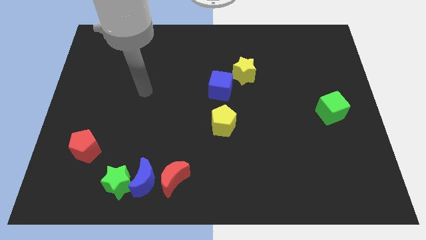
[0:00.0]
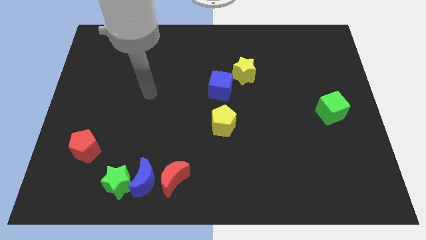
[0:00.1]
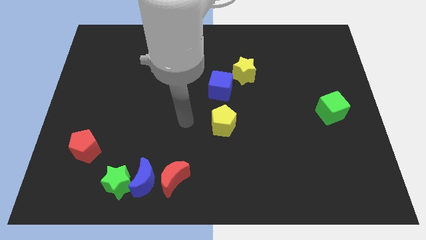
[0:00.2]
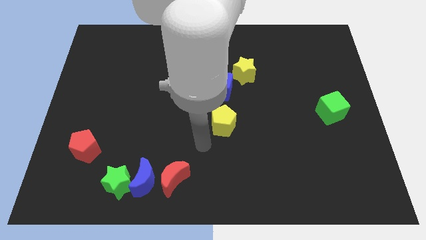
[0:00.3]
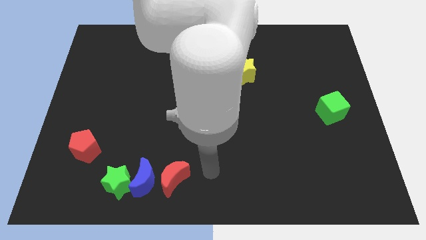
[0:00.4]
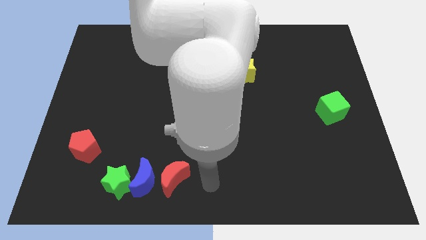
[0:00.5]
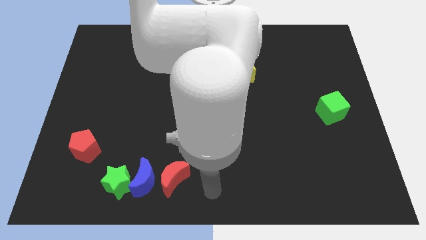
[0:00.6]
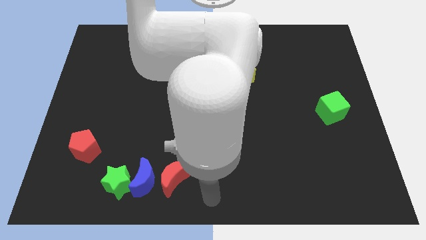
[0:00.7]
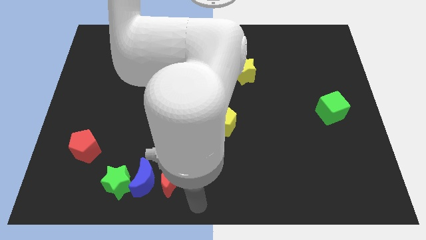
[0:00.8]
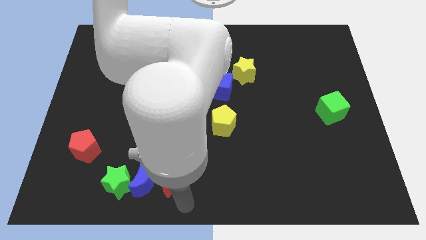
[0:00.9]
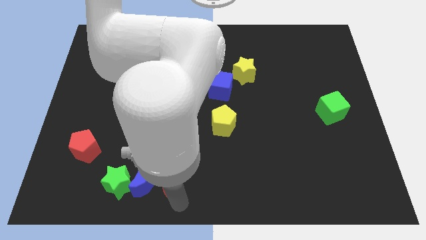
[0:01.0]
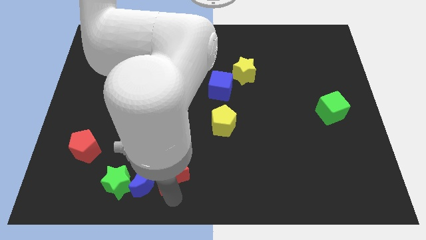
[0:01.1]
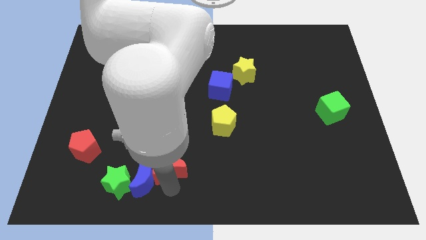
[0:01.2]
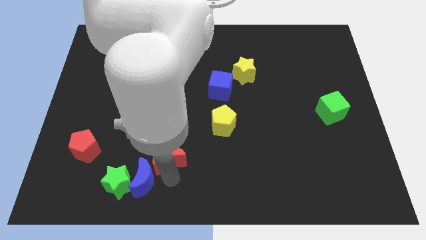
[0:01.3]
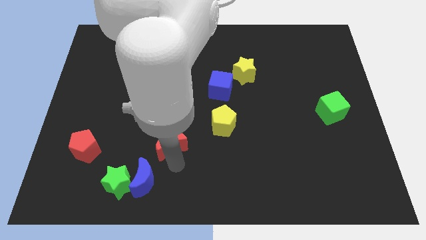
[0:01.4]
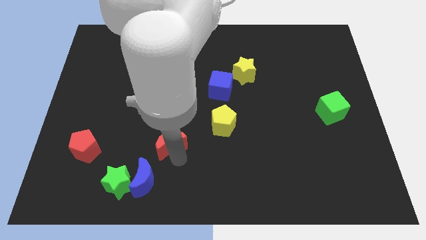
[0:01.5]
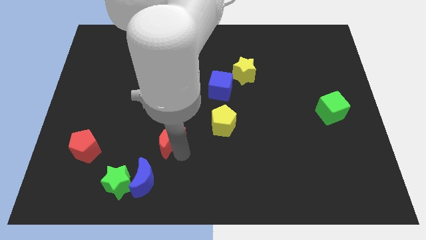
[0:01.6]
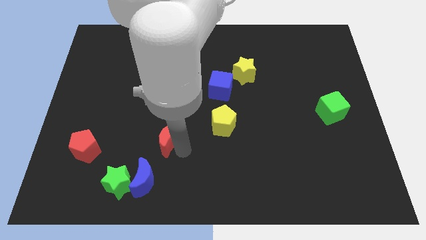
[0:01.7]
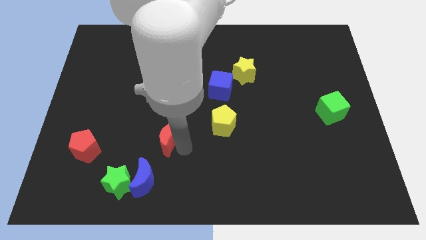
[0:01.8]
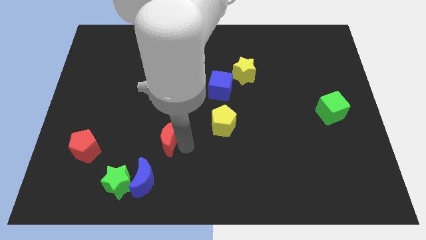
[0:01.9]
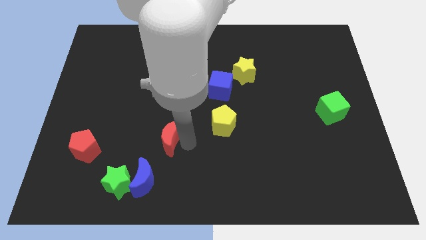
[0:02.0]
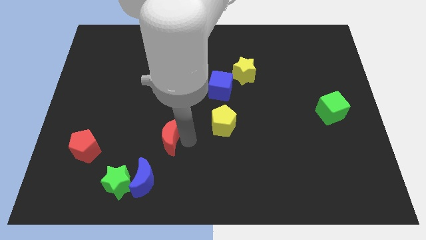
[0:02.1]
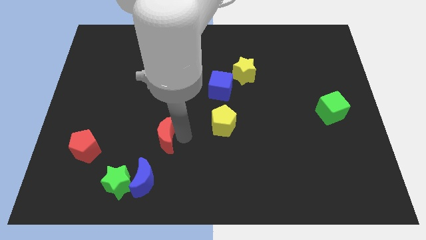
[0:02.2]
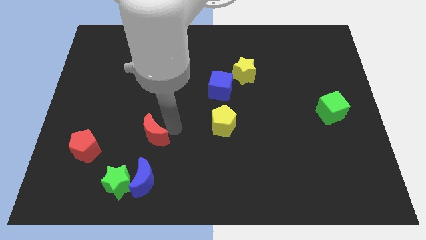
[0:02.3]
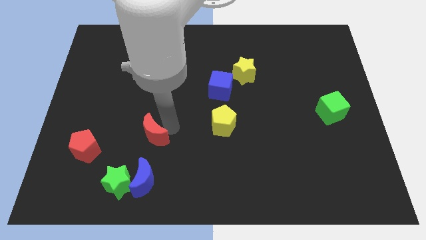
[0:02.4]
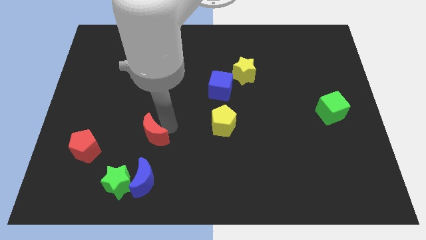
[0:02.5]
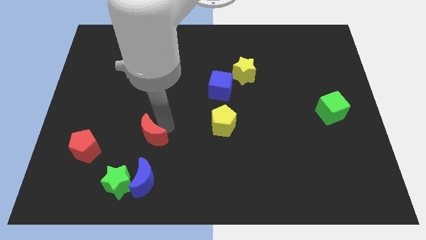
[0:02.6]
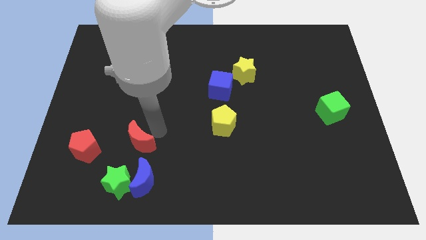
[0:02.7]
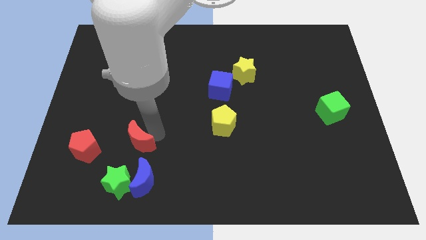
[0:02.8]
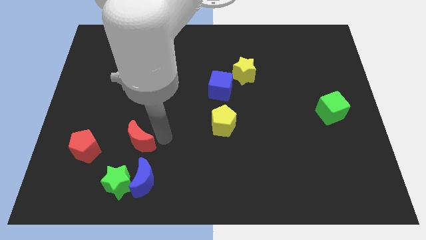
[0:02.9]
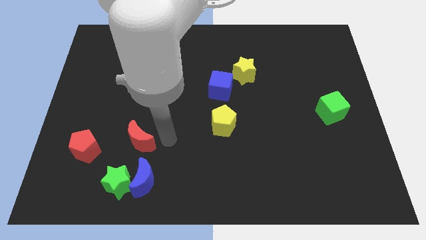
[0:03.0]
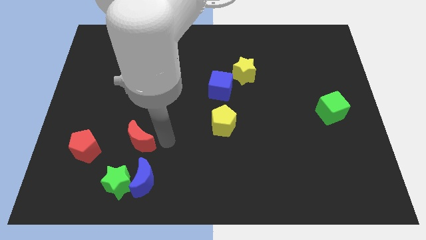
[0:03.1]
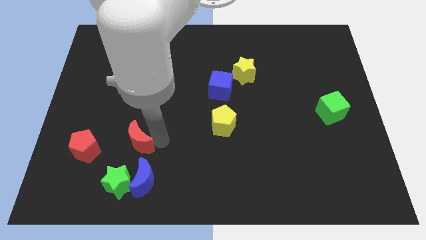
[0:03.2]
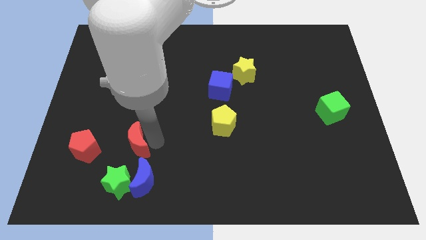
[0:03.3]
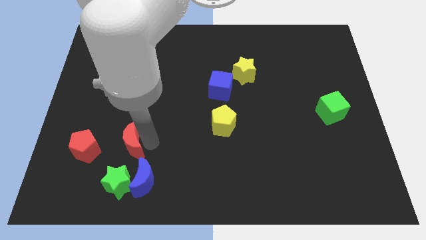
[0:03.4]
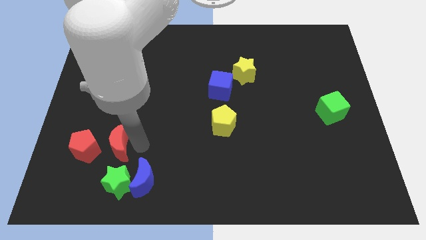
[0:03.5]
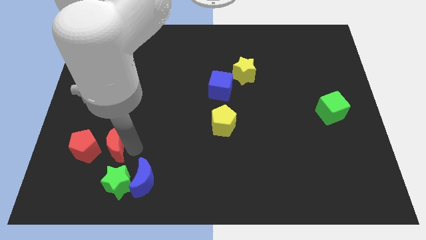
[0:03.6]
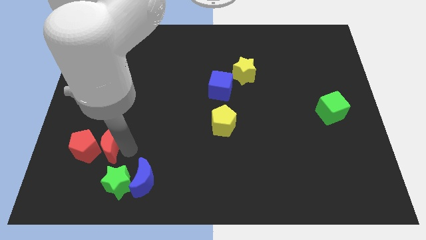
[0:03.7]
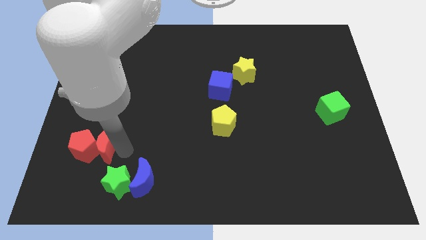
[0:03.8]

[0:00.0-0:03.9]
slide the red moon towards the red pentagon

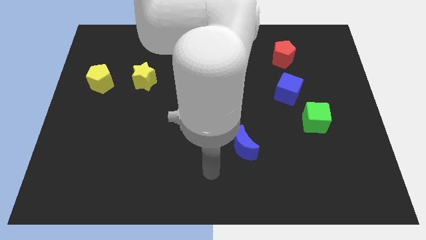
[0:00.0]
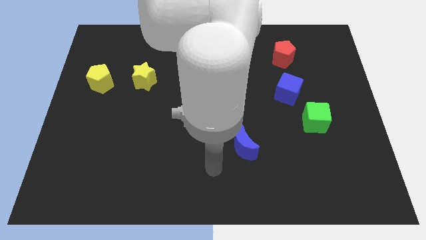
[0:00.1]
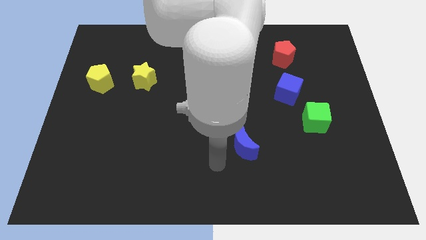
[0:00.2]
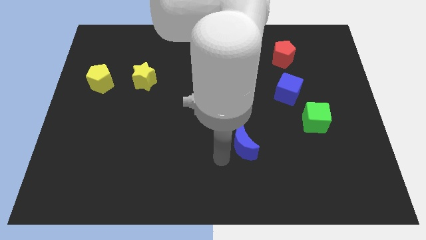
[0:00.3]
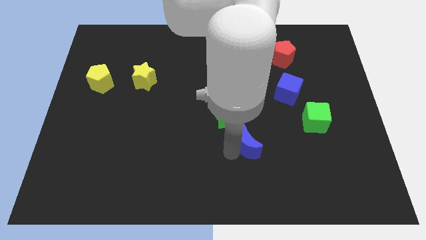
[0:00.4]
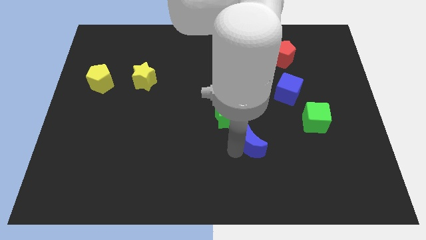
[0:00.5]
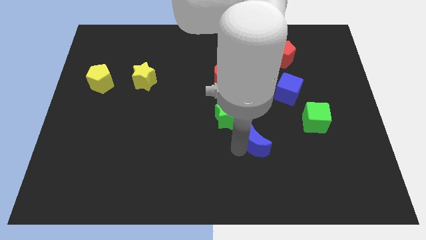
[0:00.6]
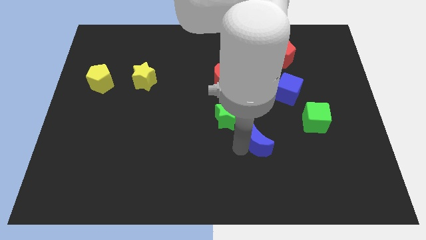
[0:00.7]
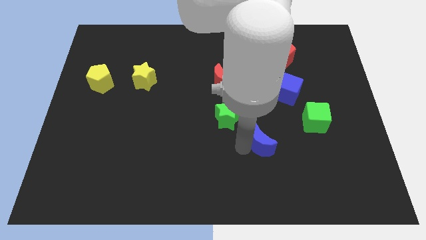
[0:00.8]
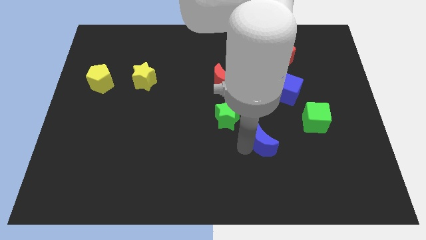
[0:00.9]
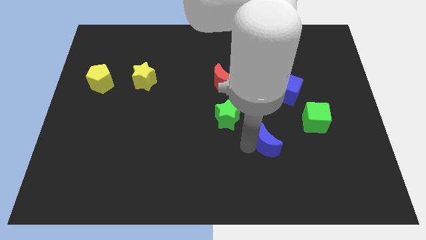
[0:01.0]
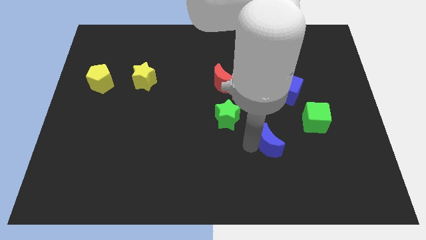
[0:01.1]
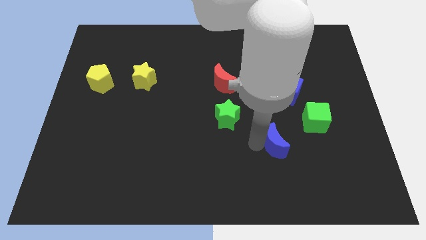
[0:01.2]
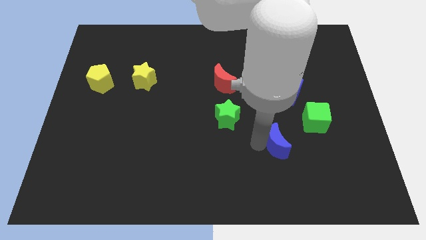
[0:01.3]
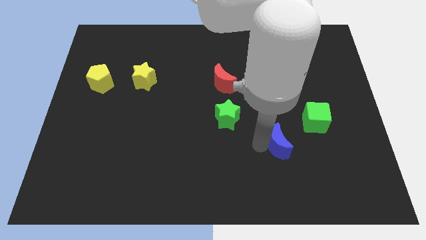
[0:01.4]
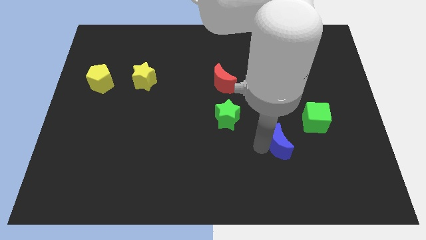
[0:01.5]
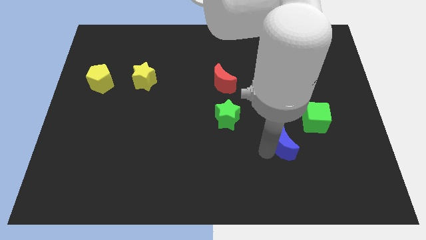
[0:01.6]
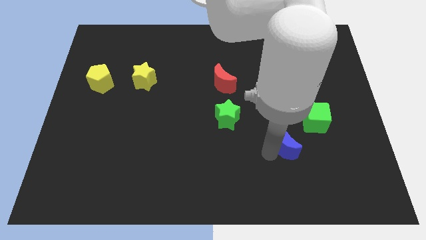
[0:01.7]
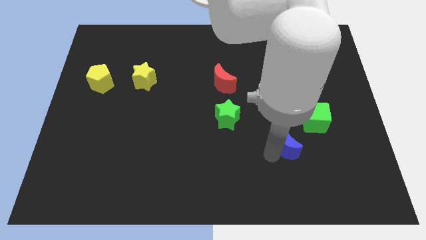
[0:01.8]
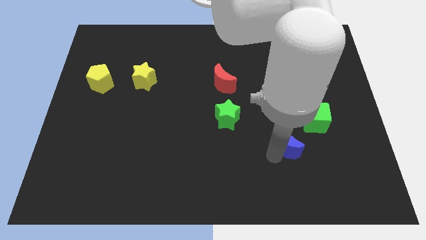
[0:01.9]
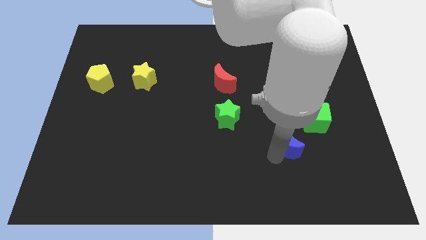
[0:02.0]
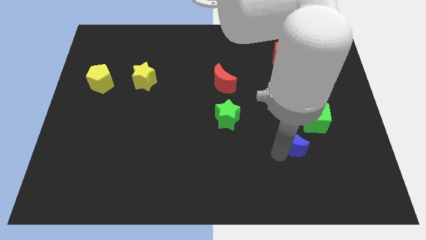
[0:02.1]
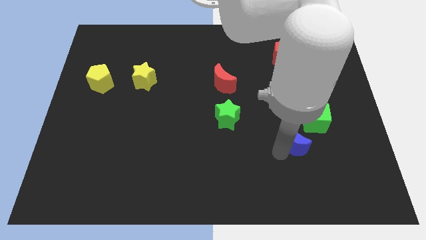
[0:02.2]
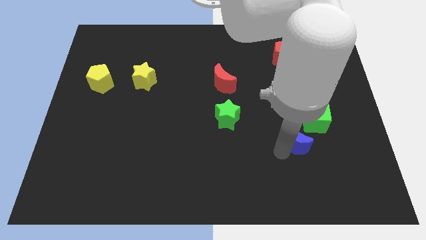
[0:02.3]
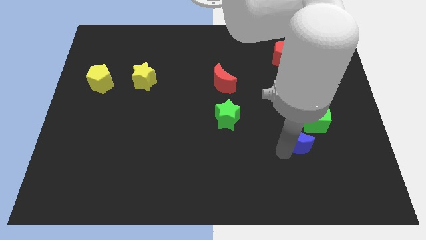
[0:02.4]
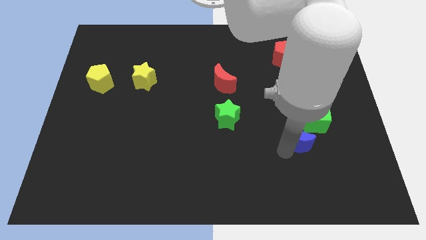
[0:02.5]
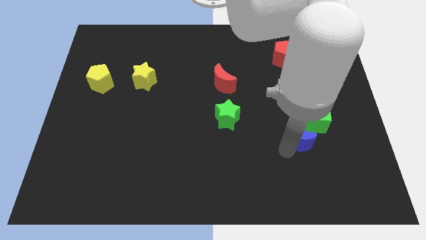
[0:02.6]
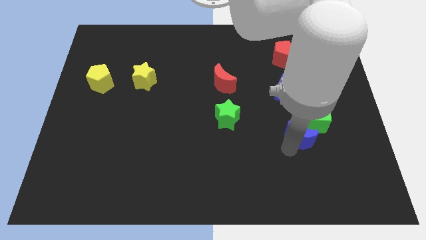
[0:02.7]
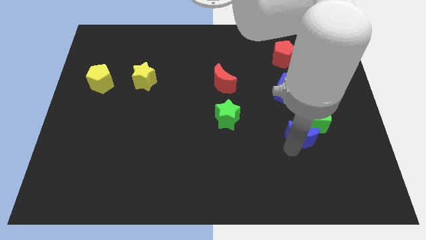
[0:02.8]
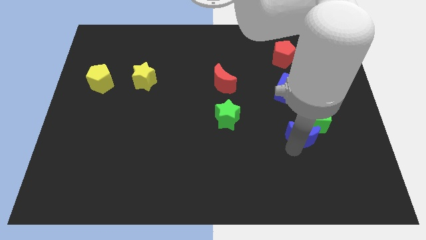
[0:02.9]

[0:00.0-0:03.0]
put the blue moon next to the green cube

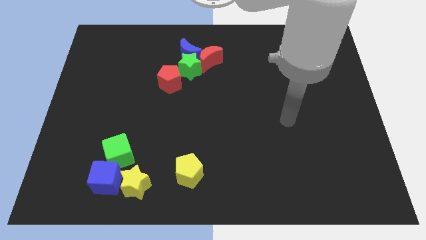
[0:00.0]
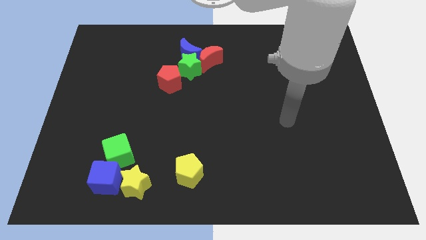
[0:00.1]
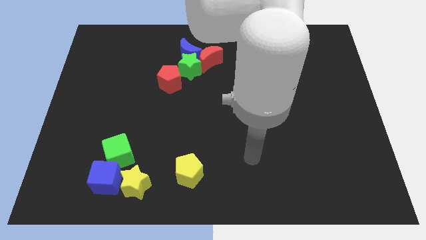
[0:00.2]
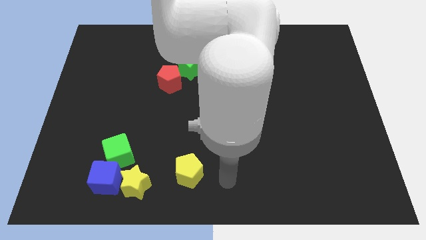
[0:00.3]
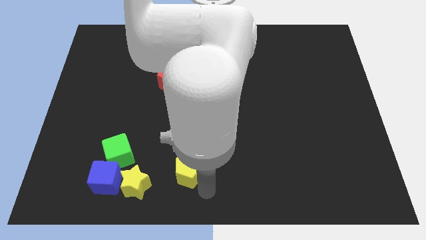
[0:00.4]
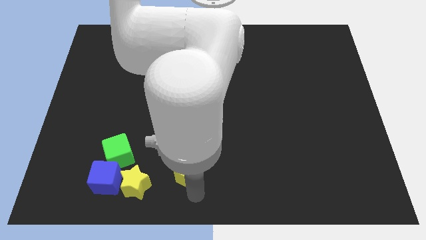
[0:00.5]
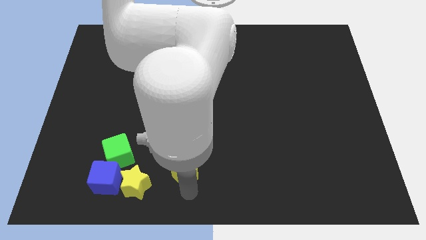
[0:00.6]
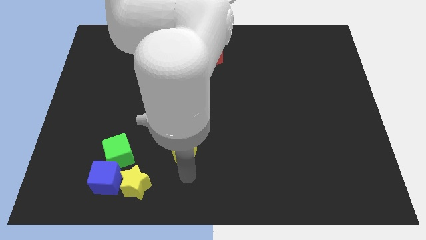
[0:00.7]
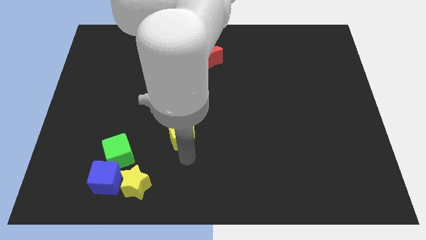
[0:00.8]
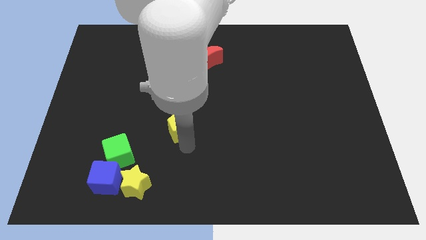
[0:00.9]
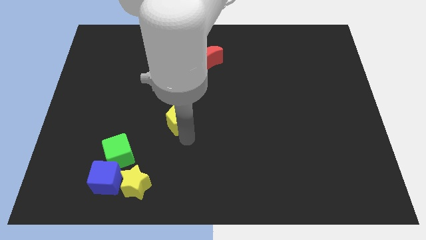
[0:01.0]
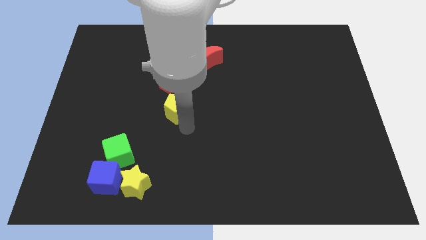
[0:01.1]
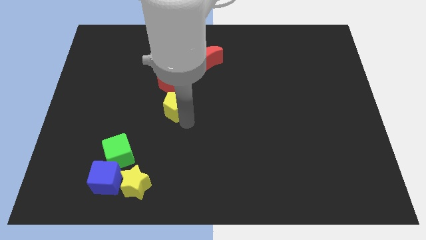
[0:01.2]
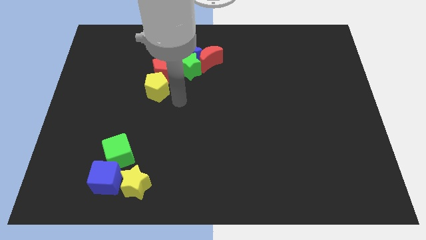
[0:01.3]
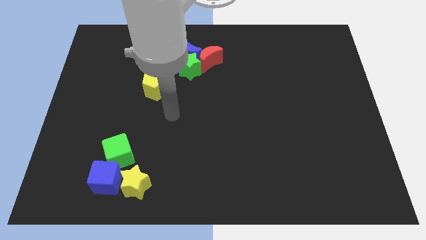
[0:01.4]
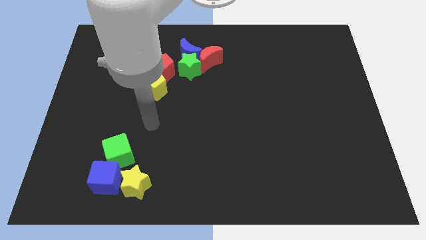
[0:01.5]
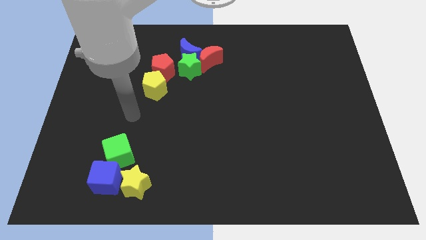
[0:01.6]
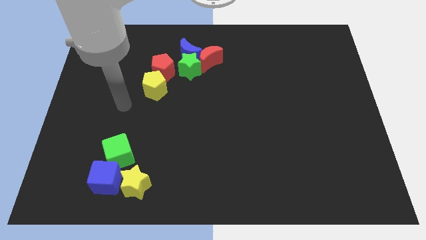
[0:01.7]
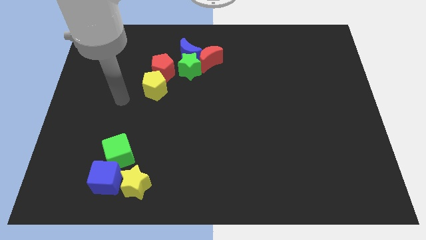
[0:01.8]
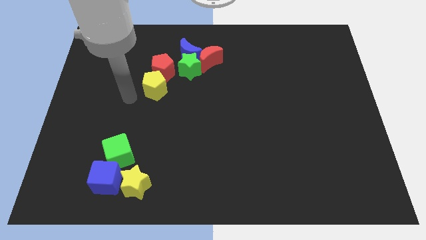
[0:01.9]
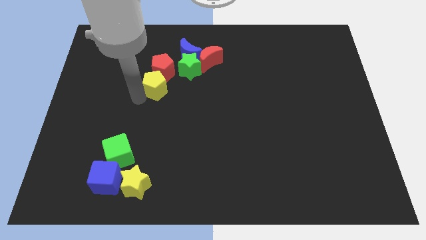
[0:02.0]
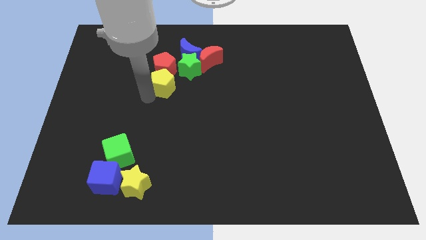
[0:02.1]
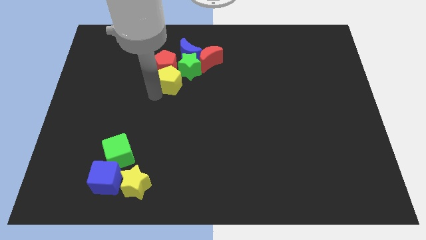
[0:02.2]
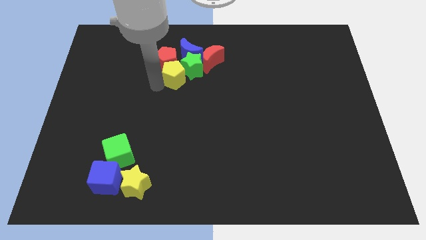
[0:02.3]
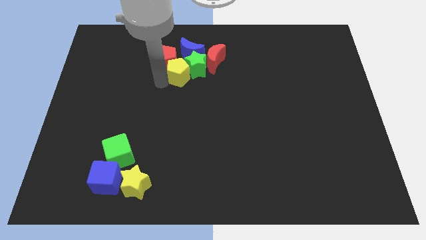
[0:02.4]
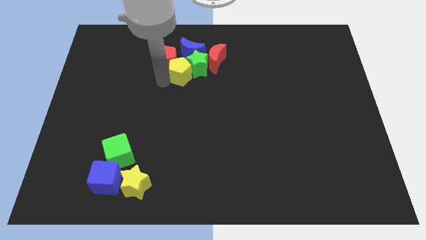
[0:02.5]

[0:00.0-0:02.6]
slide the yellow pentagon towards the green star
